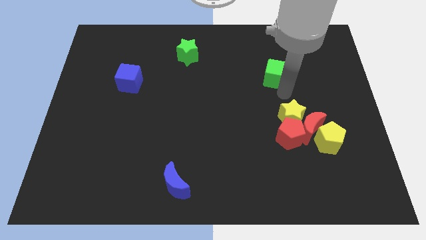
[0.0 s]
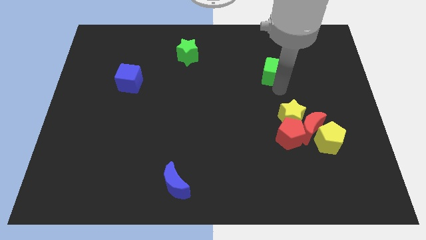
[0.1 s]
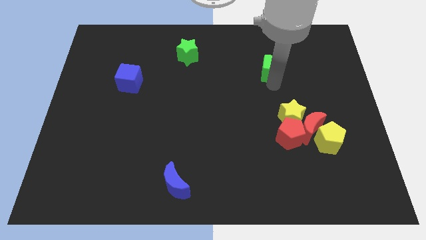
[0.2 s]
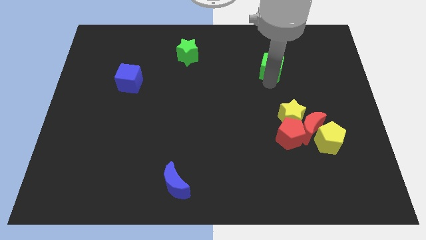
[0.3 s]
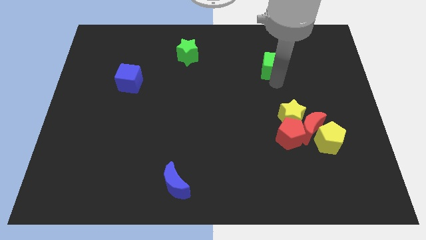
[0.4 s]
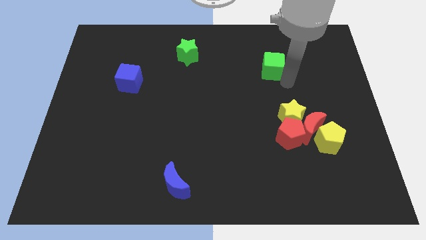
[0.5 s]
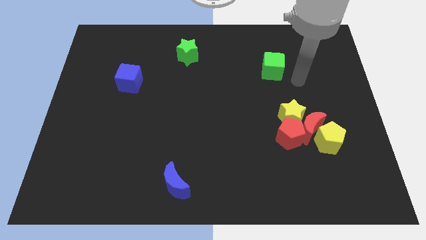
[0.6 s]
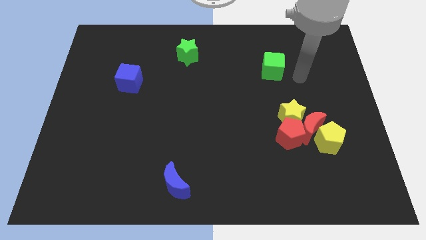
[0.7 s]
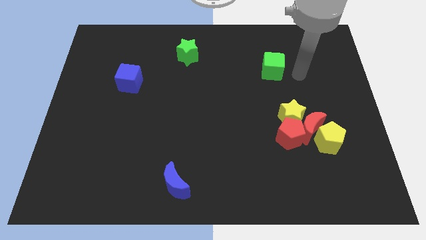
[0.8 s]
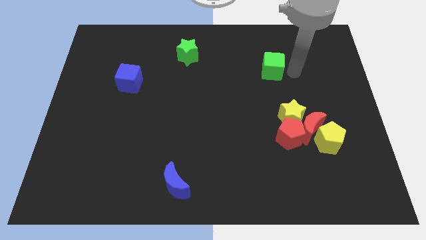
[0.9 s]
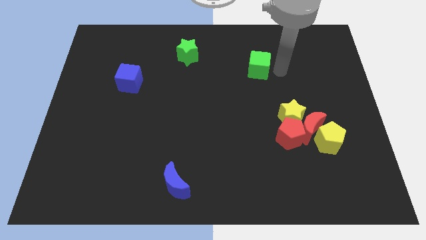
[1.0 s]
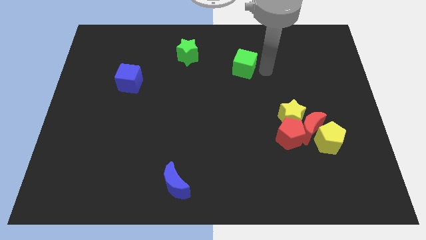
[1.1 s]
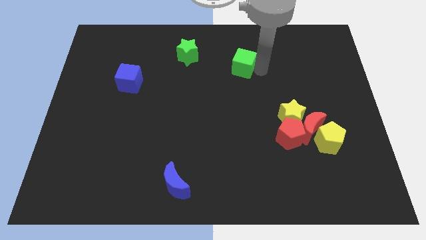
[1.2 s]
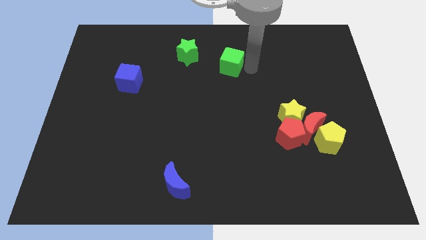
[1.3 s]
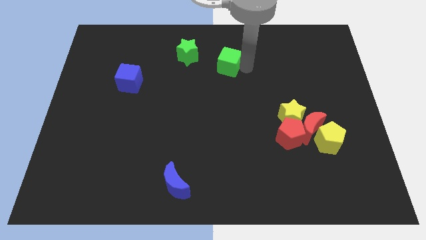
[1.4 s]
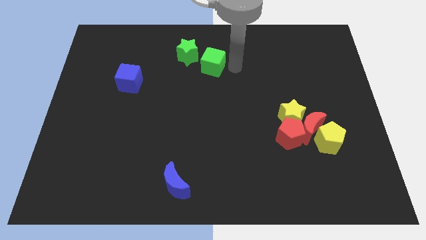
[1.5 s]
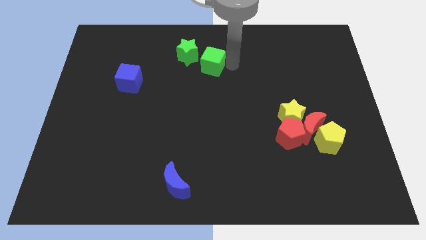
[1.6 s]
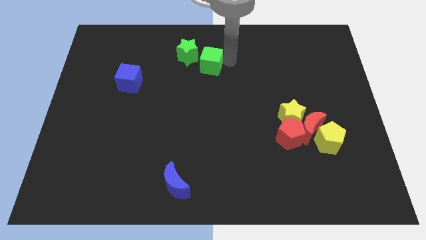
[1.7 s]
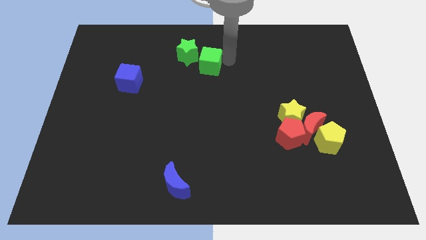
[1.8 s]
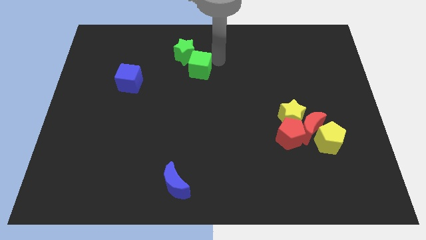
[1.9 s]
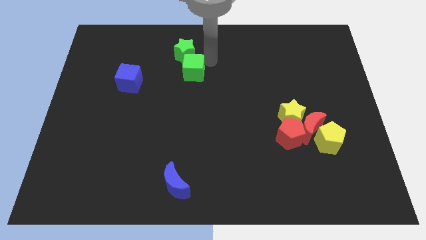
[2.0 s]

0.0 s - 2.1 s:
push the green cube to the bottom of the green star

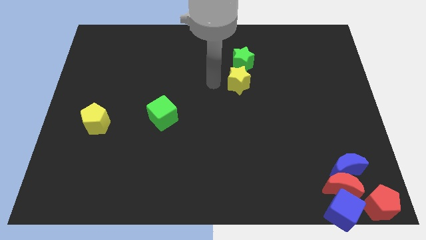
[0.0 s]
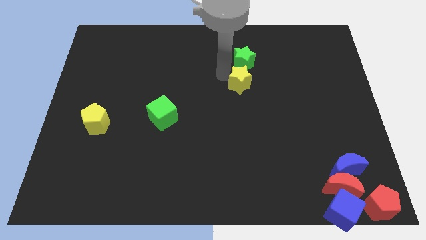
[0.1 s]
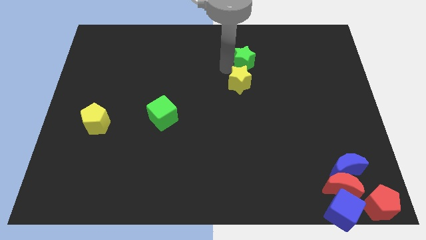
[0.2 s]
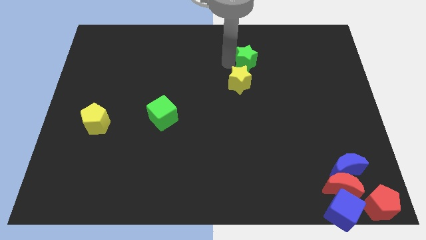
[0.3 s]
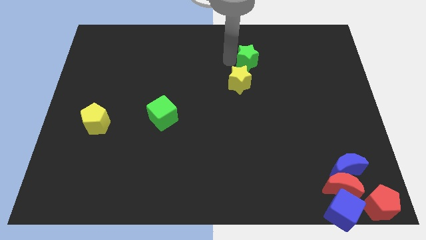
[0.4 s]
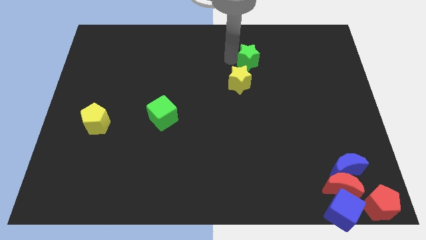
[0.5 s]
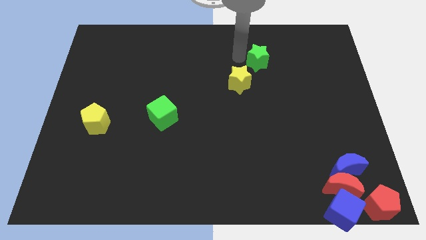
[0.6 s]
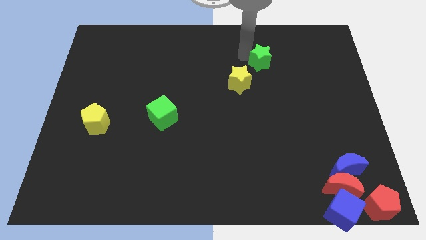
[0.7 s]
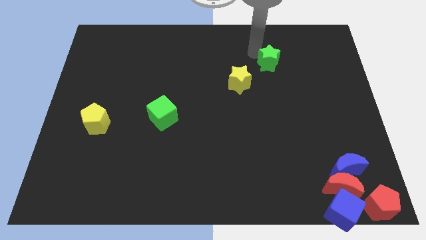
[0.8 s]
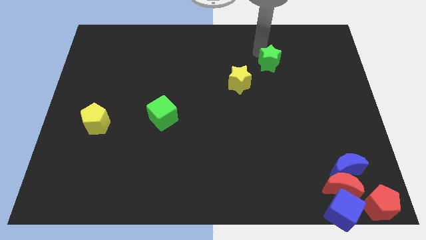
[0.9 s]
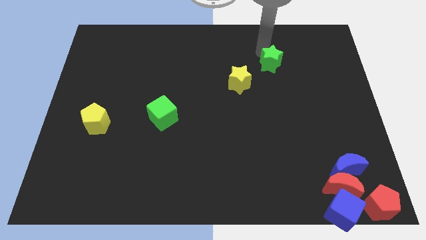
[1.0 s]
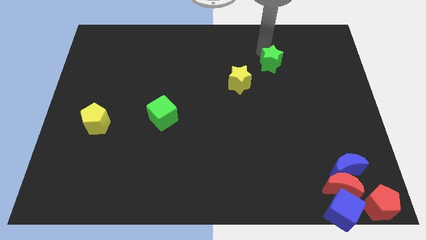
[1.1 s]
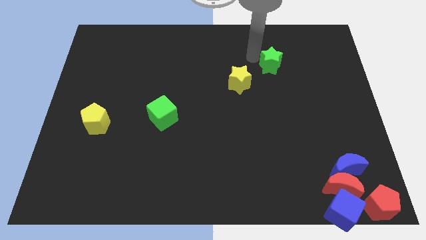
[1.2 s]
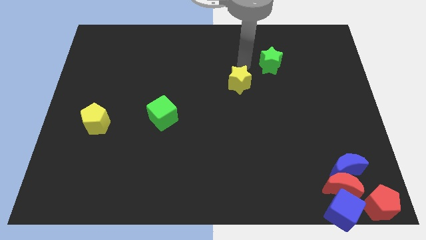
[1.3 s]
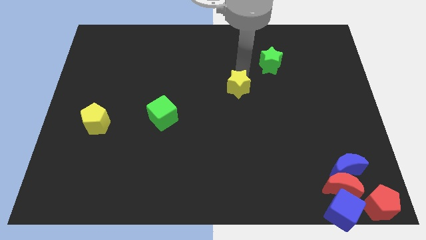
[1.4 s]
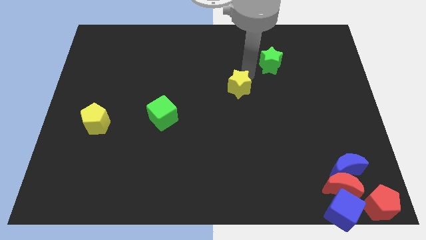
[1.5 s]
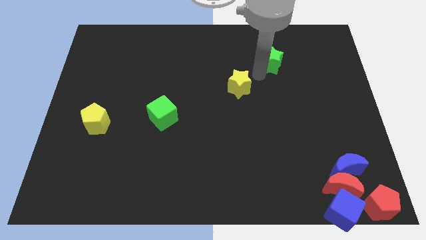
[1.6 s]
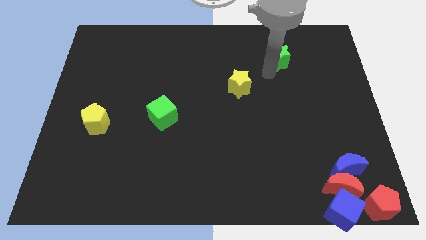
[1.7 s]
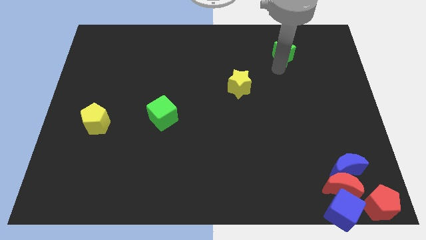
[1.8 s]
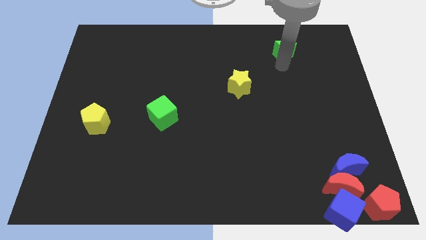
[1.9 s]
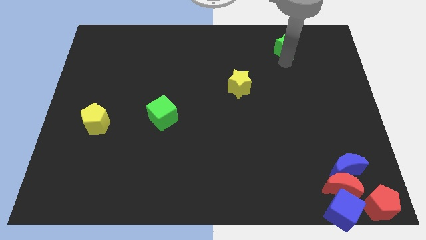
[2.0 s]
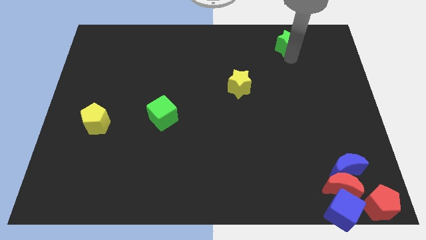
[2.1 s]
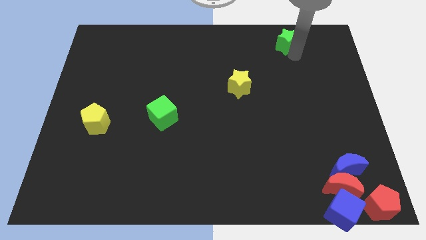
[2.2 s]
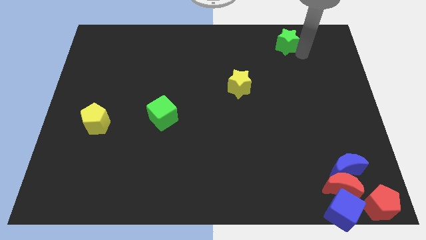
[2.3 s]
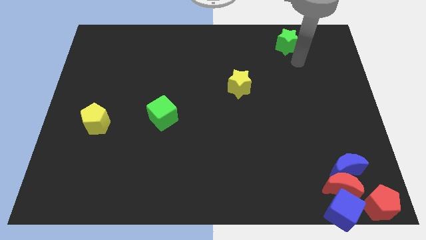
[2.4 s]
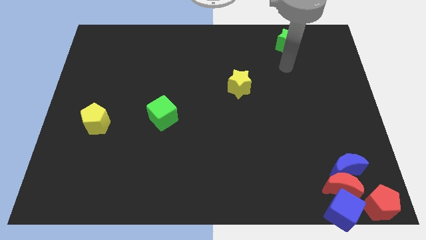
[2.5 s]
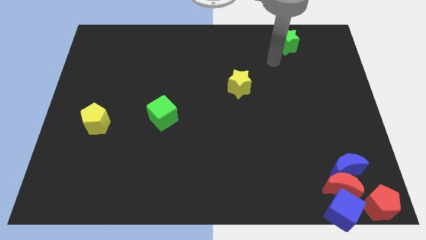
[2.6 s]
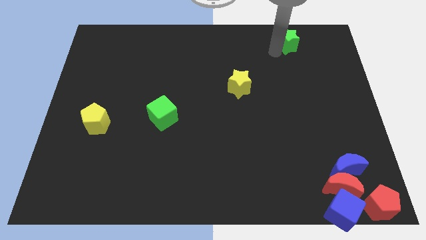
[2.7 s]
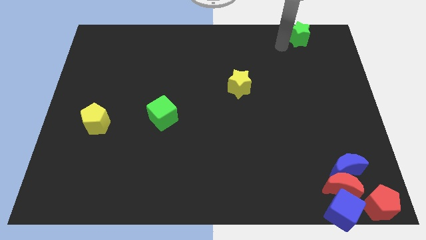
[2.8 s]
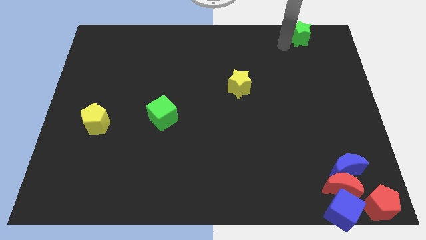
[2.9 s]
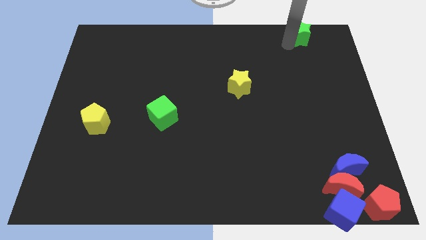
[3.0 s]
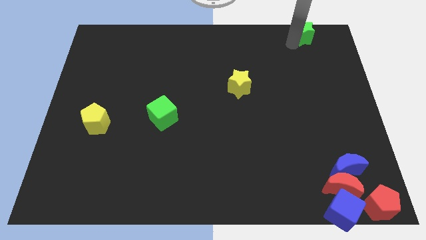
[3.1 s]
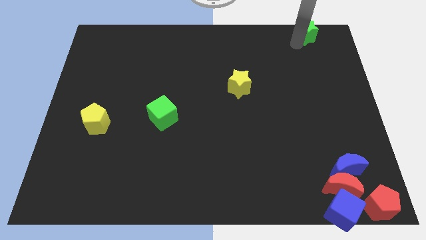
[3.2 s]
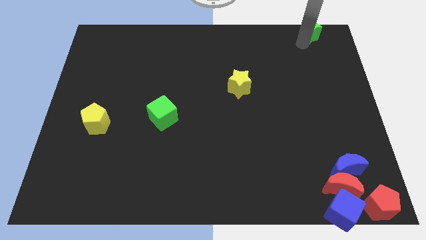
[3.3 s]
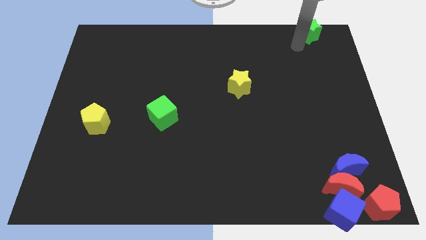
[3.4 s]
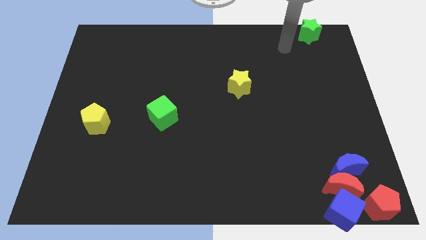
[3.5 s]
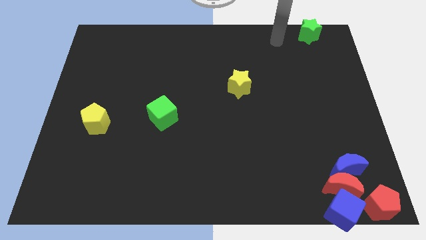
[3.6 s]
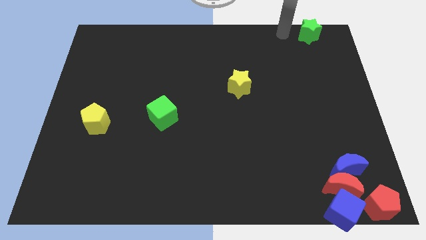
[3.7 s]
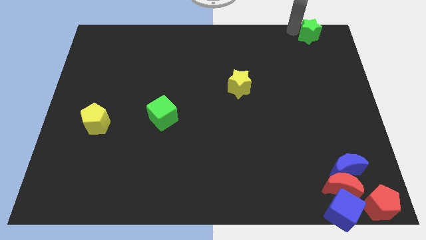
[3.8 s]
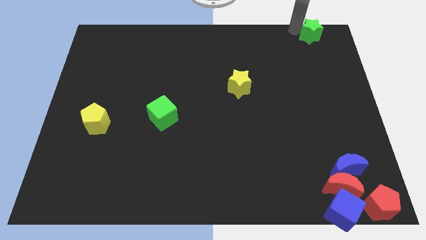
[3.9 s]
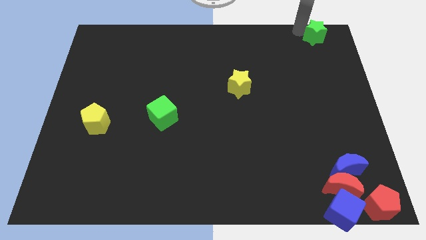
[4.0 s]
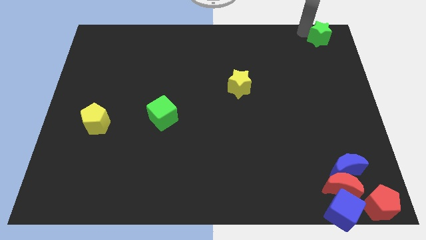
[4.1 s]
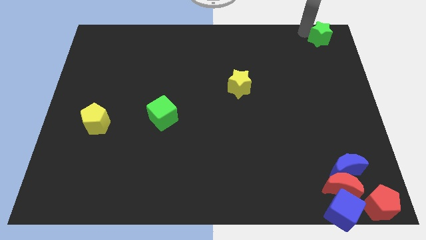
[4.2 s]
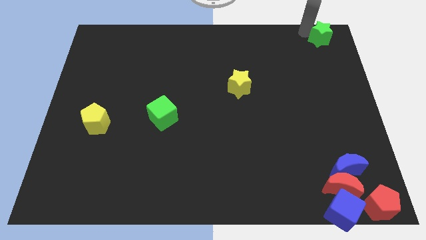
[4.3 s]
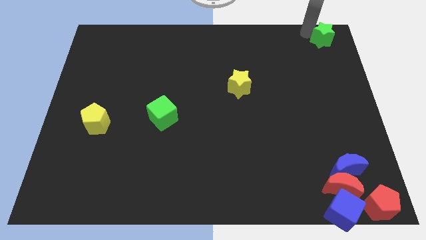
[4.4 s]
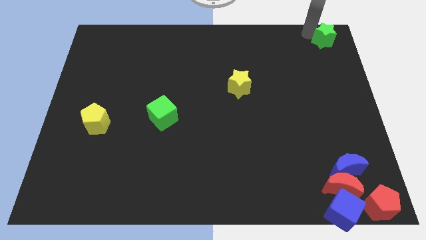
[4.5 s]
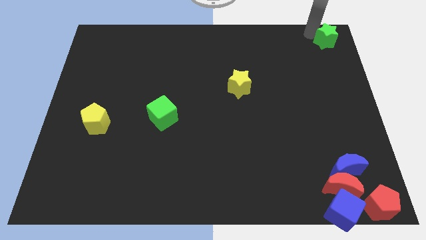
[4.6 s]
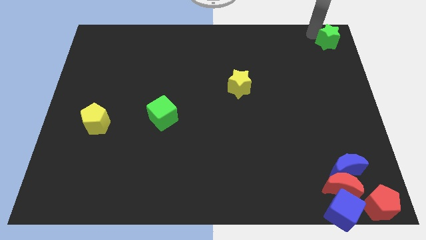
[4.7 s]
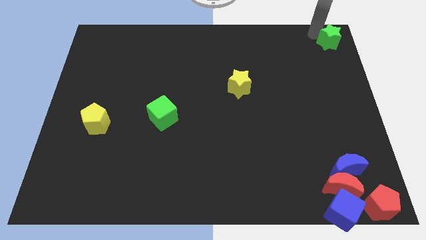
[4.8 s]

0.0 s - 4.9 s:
move the green star to the top right of the table

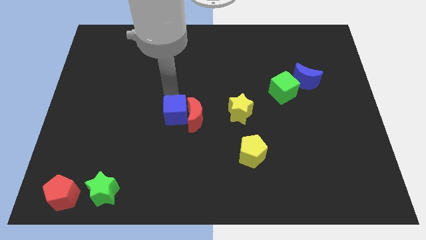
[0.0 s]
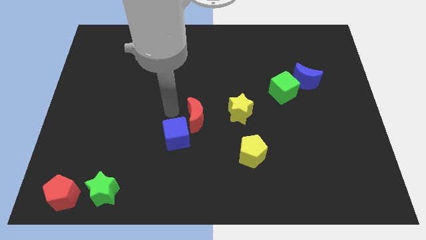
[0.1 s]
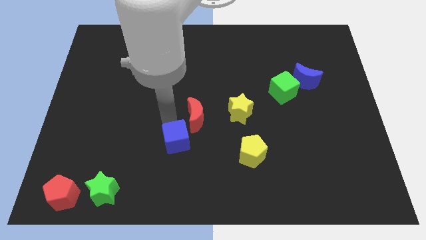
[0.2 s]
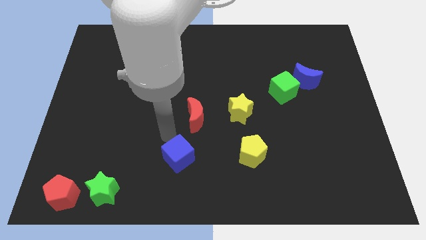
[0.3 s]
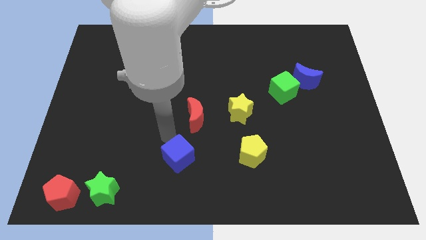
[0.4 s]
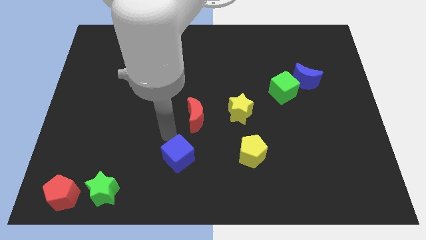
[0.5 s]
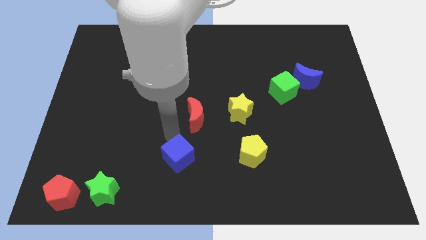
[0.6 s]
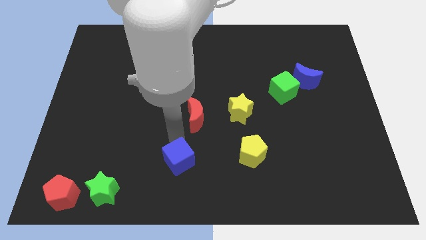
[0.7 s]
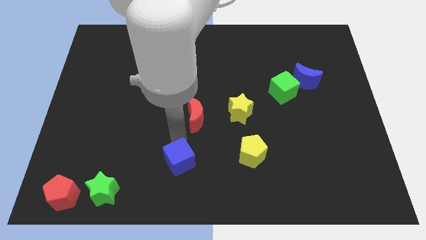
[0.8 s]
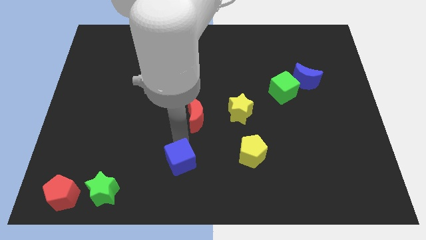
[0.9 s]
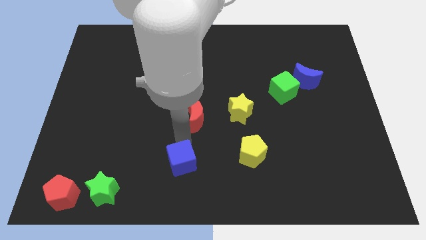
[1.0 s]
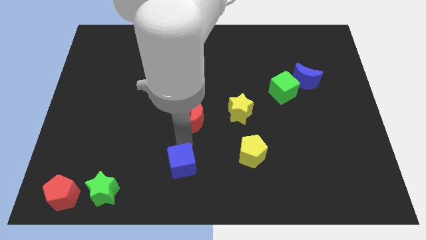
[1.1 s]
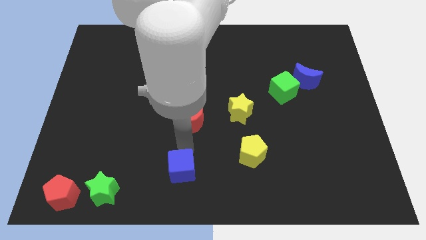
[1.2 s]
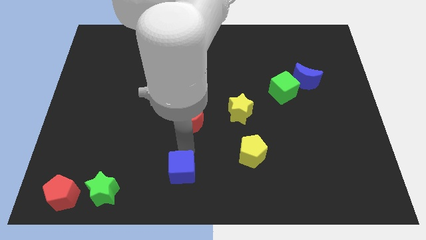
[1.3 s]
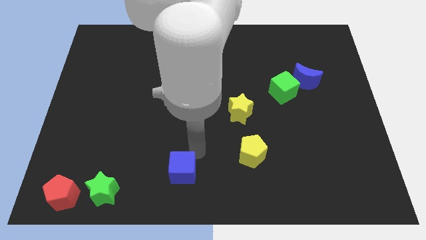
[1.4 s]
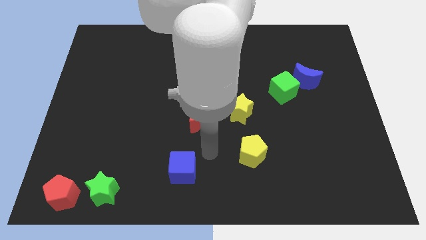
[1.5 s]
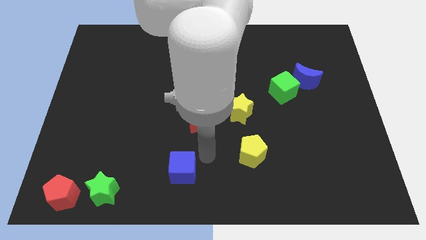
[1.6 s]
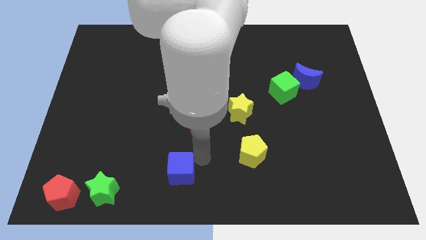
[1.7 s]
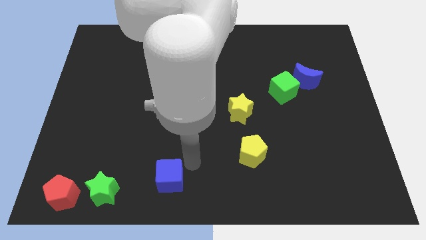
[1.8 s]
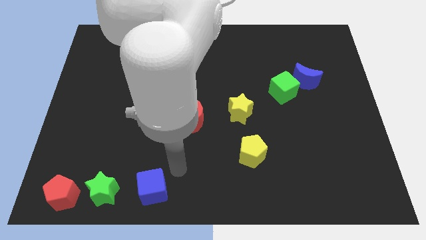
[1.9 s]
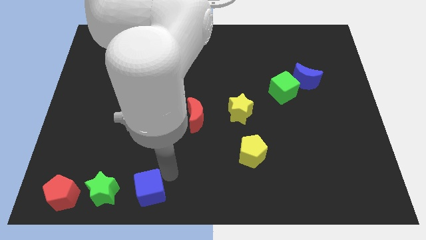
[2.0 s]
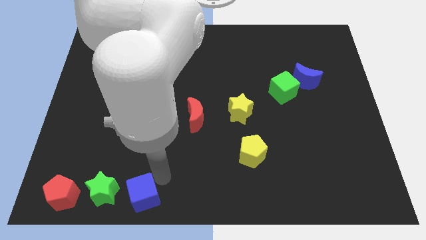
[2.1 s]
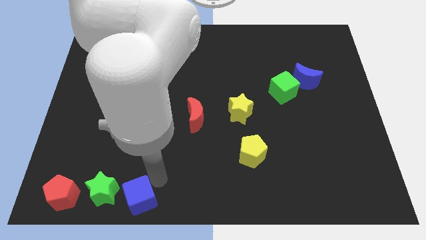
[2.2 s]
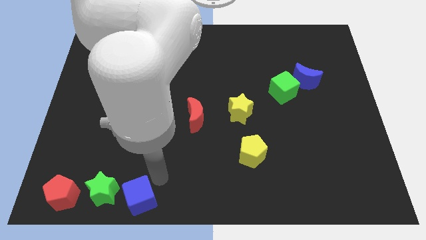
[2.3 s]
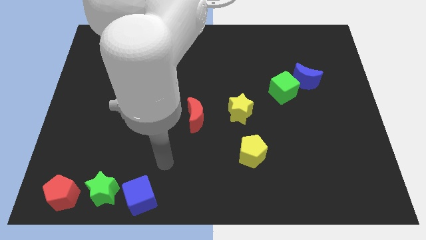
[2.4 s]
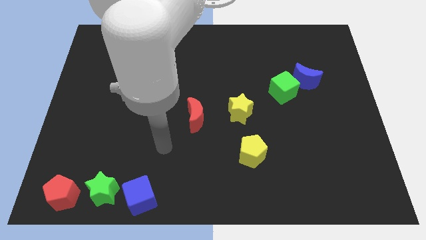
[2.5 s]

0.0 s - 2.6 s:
move the blue cube on right to green star
